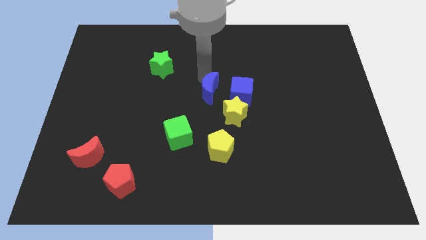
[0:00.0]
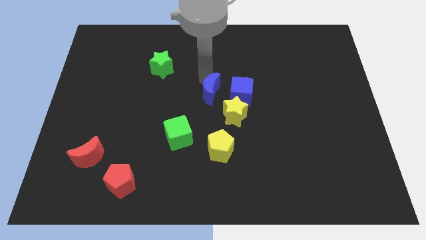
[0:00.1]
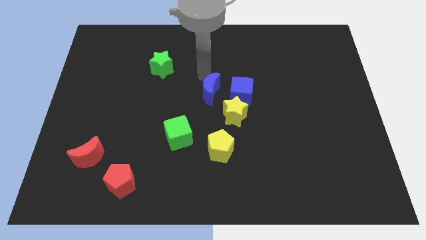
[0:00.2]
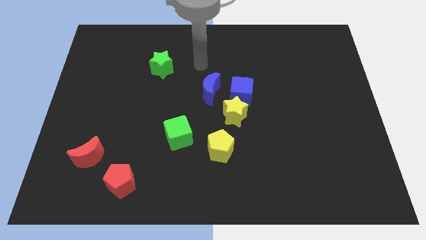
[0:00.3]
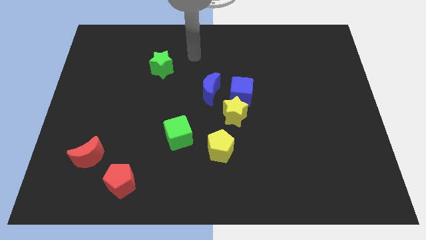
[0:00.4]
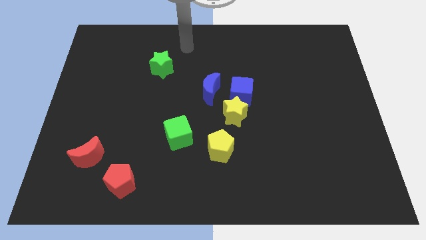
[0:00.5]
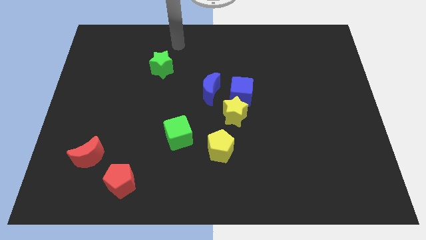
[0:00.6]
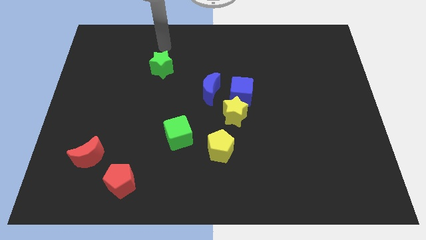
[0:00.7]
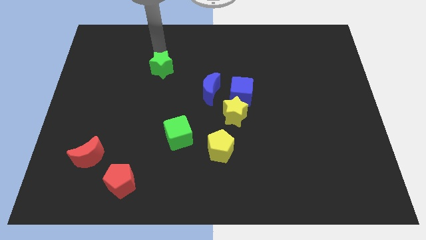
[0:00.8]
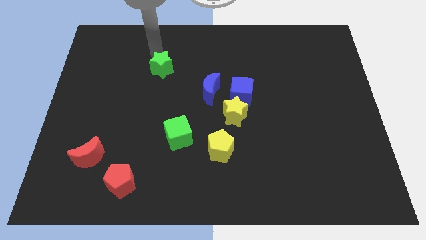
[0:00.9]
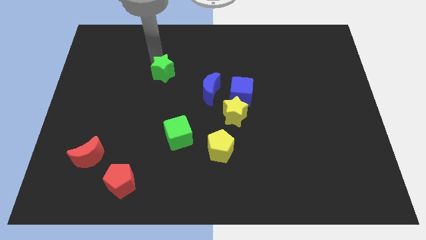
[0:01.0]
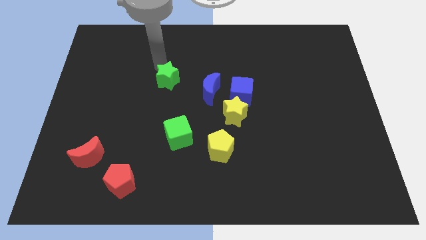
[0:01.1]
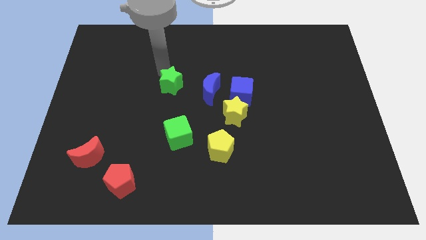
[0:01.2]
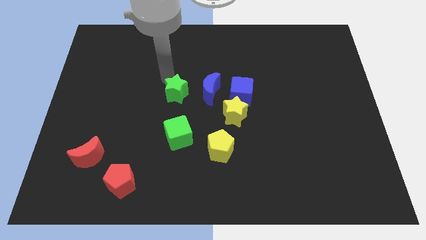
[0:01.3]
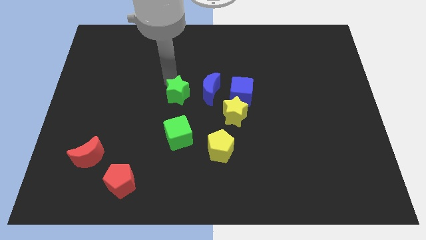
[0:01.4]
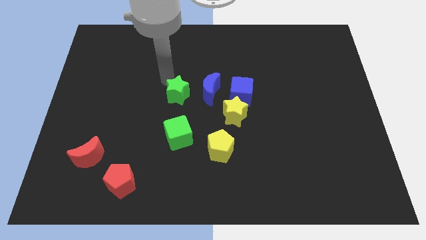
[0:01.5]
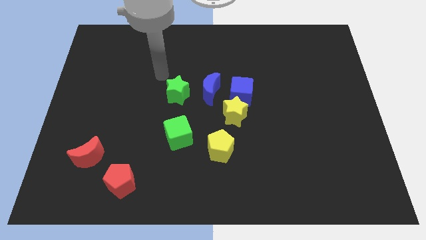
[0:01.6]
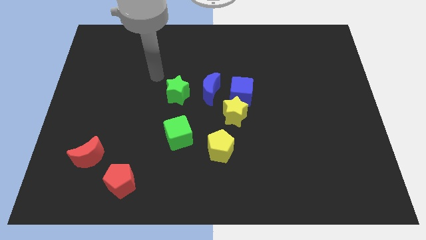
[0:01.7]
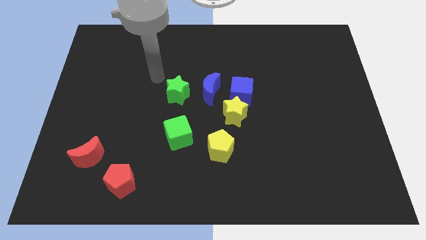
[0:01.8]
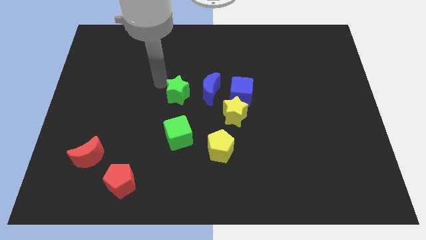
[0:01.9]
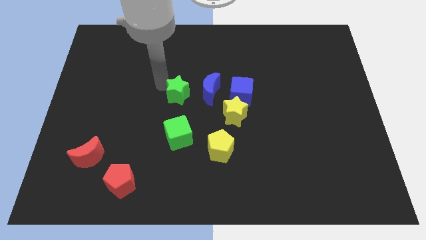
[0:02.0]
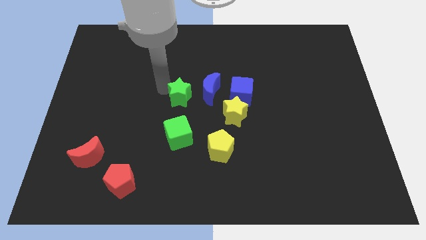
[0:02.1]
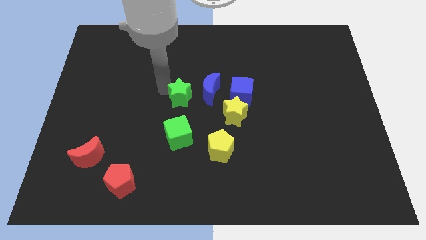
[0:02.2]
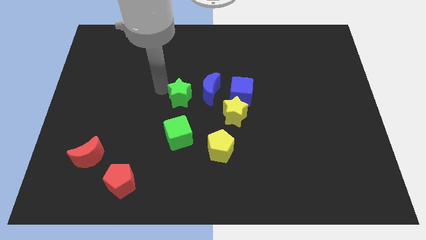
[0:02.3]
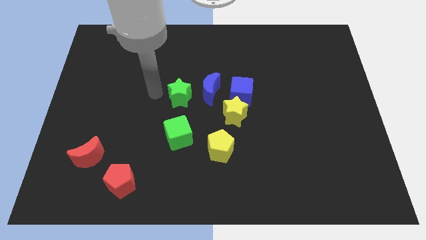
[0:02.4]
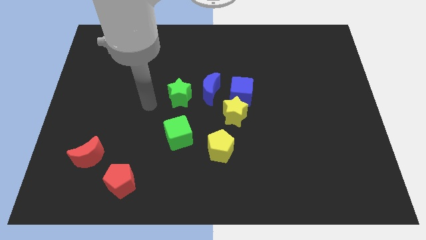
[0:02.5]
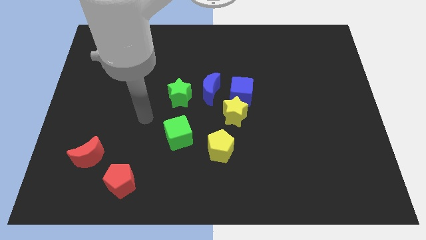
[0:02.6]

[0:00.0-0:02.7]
push the green star to the left of the blue crescent

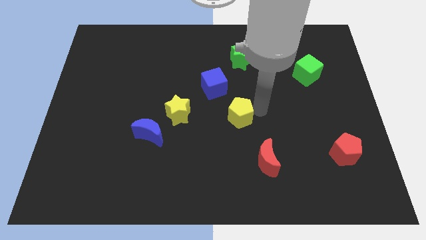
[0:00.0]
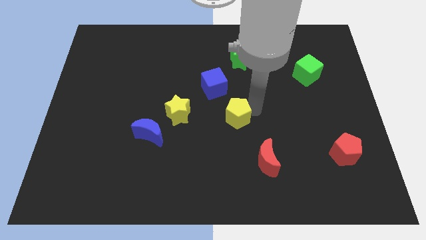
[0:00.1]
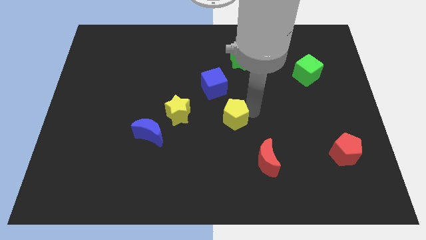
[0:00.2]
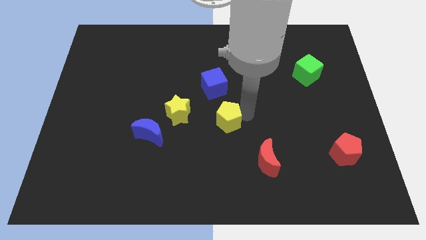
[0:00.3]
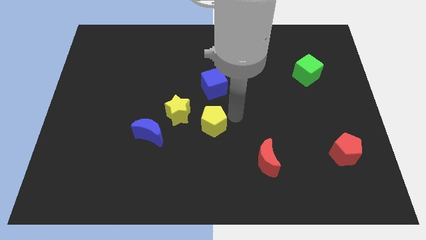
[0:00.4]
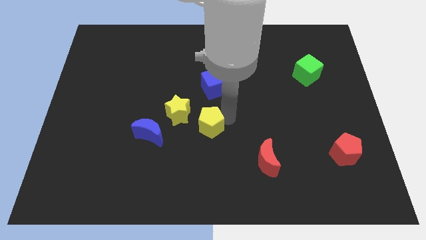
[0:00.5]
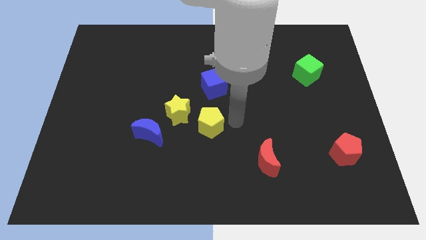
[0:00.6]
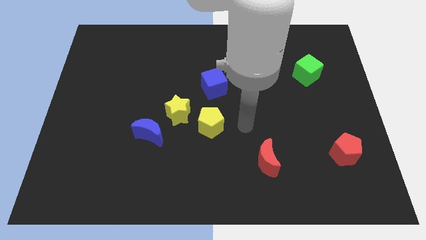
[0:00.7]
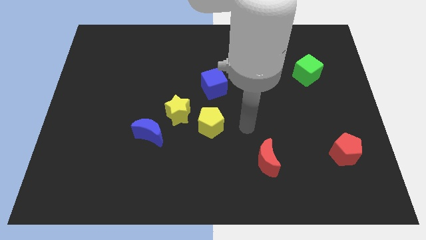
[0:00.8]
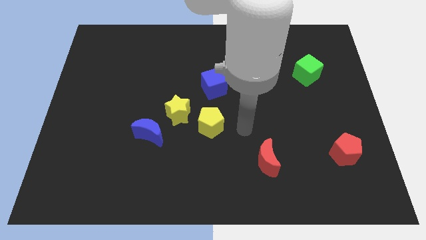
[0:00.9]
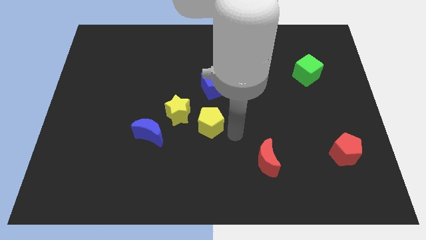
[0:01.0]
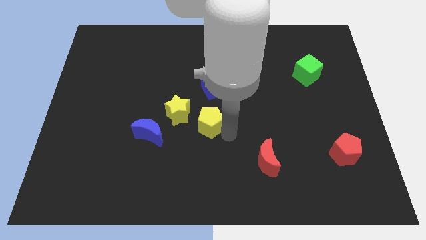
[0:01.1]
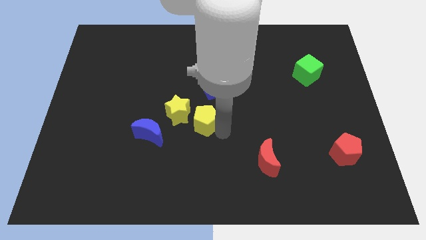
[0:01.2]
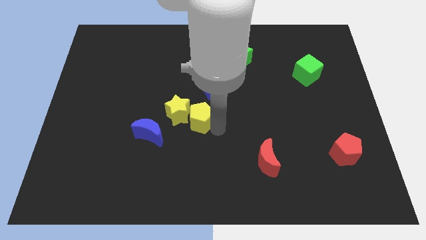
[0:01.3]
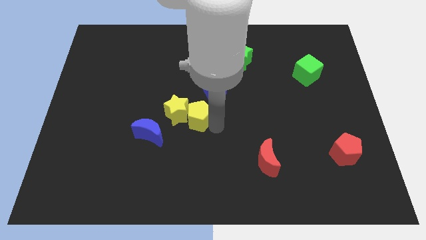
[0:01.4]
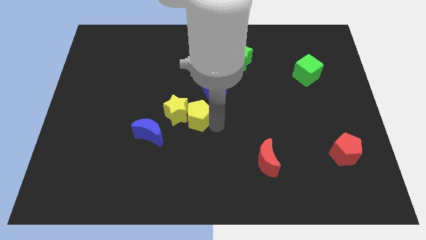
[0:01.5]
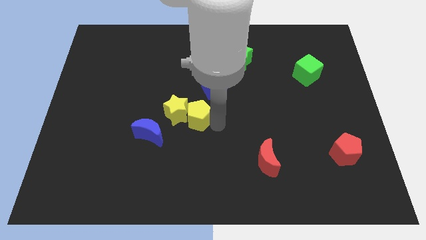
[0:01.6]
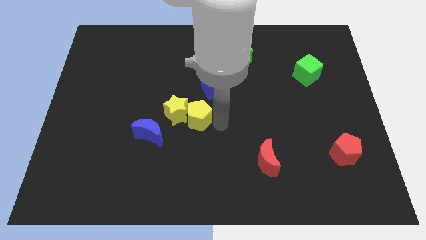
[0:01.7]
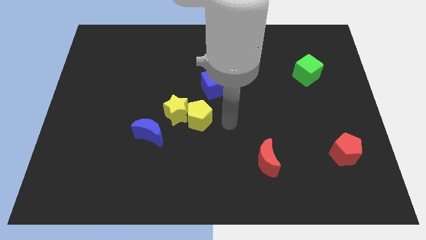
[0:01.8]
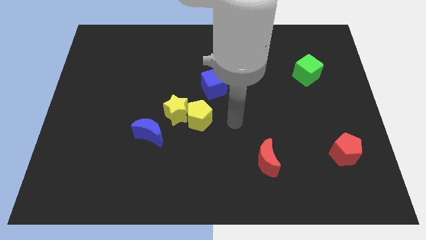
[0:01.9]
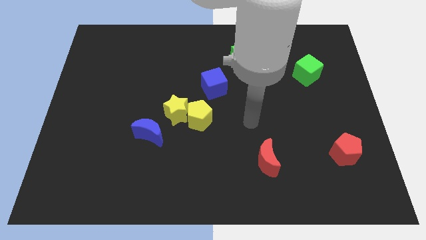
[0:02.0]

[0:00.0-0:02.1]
slide yellow pentagon into yellow star

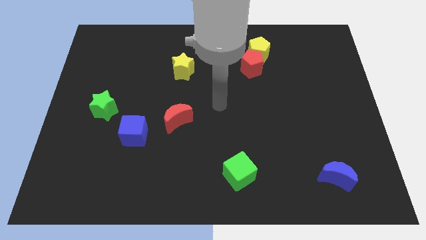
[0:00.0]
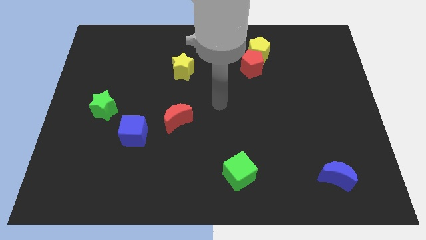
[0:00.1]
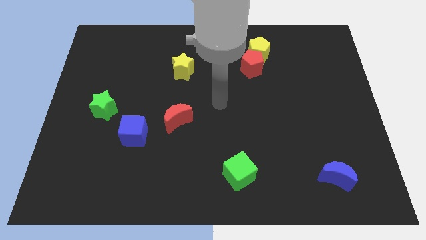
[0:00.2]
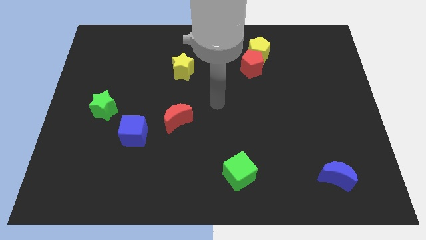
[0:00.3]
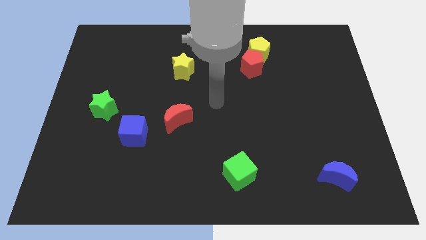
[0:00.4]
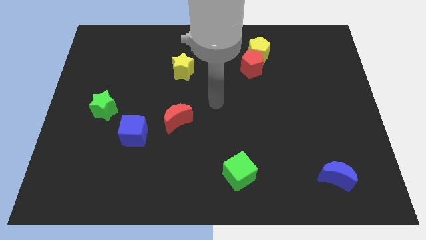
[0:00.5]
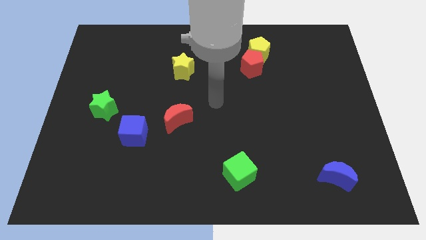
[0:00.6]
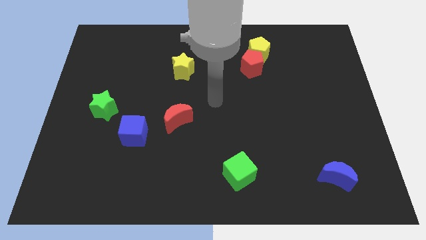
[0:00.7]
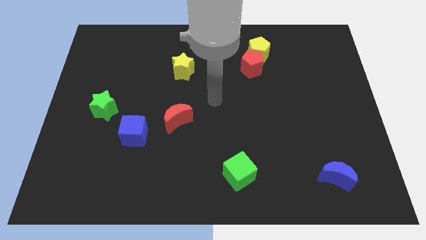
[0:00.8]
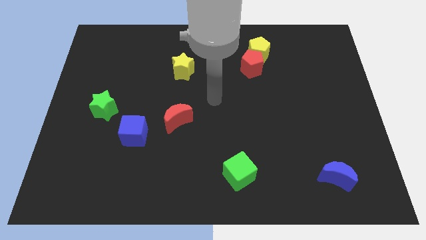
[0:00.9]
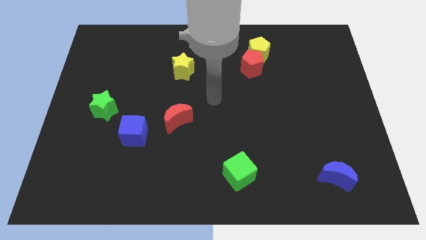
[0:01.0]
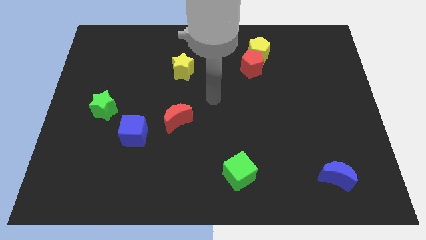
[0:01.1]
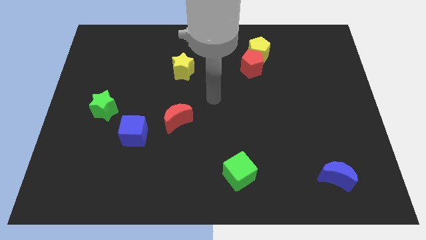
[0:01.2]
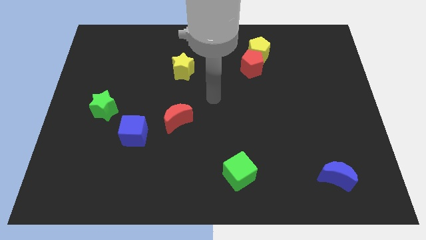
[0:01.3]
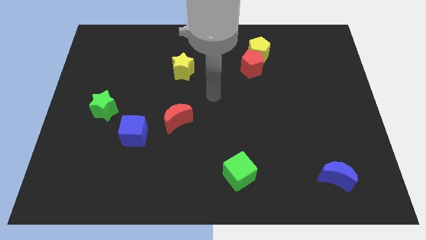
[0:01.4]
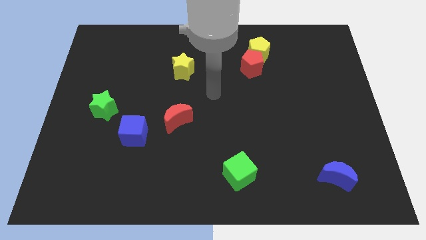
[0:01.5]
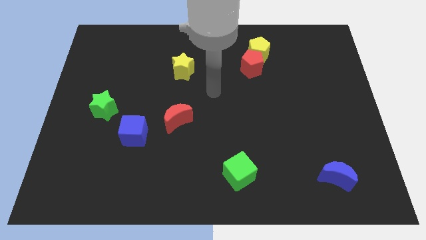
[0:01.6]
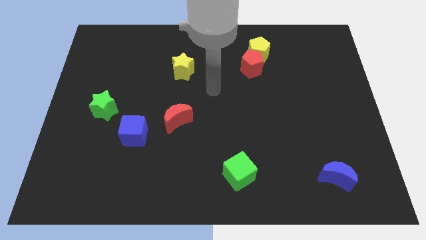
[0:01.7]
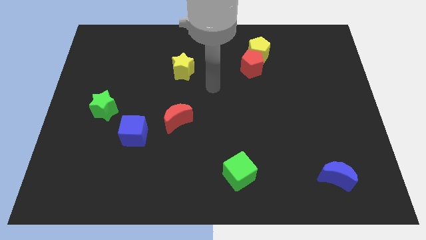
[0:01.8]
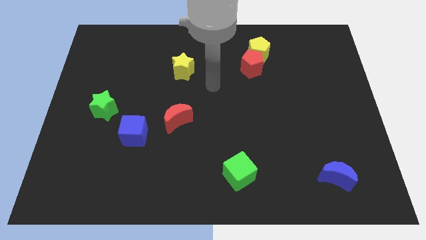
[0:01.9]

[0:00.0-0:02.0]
move the arm in between the red crescent and red pentagon

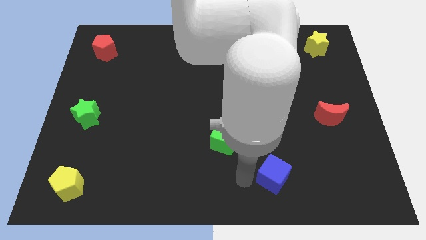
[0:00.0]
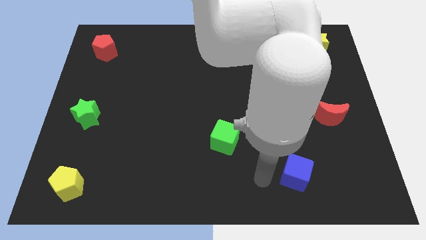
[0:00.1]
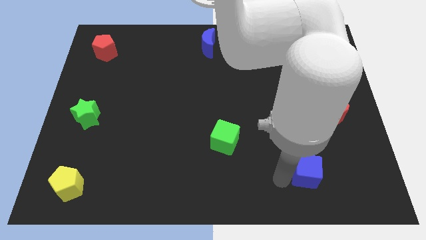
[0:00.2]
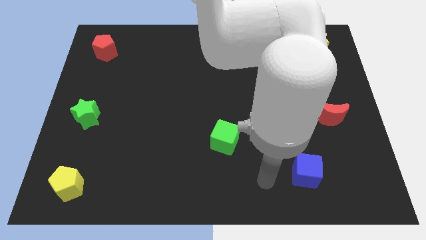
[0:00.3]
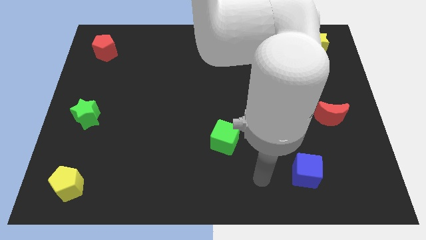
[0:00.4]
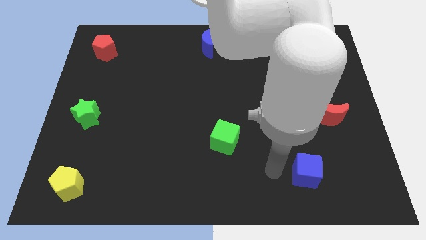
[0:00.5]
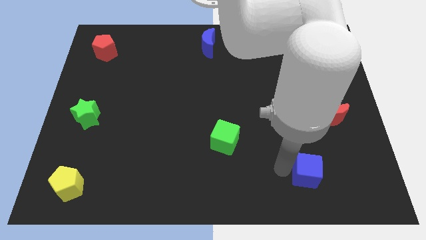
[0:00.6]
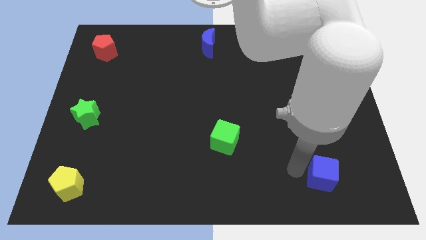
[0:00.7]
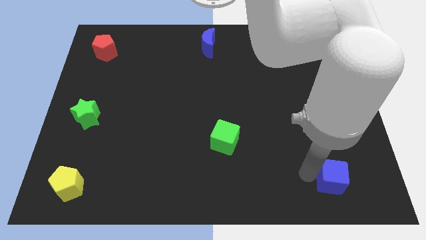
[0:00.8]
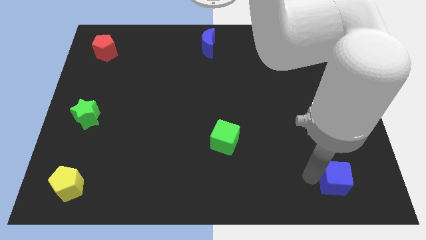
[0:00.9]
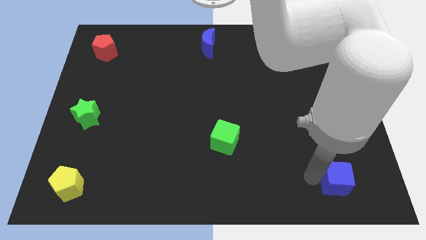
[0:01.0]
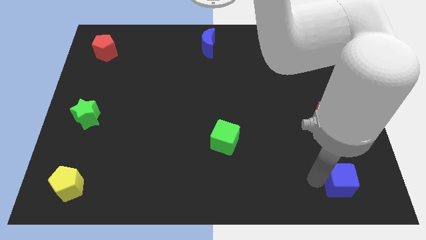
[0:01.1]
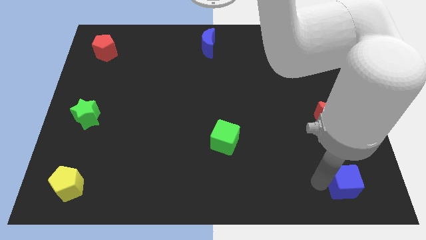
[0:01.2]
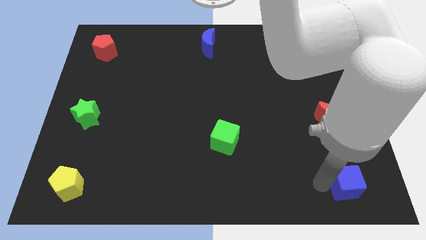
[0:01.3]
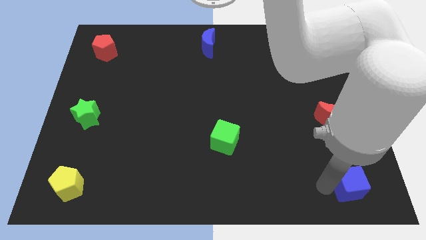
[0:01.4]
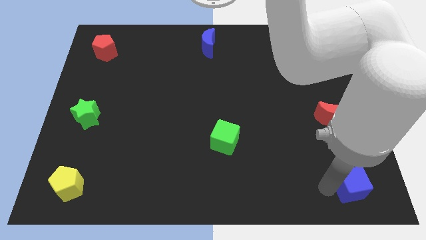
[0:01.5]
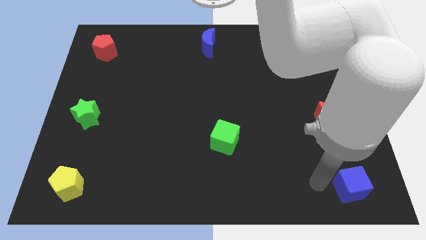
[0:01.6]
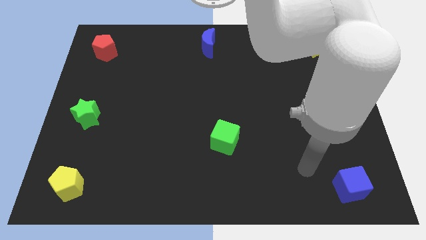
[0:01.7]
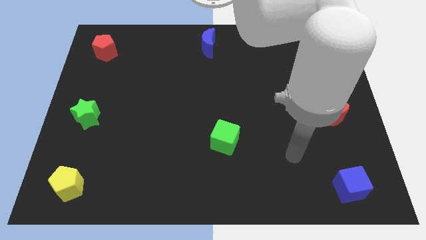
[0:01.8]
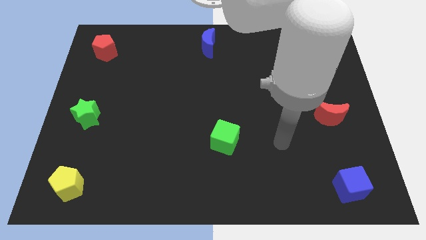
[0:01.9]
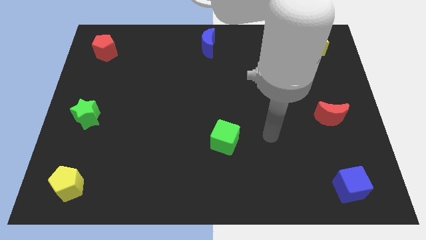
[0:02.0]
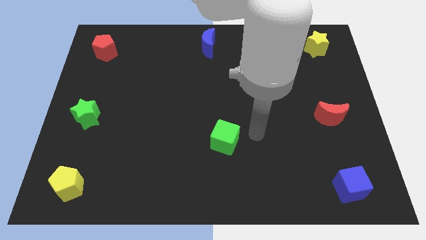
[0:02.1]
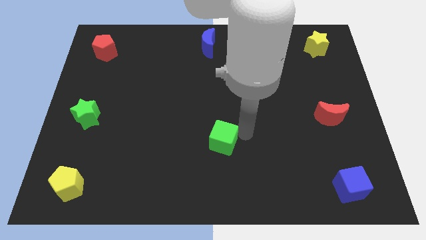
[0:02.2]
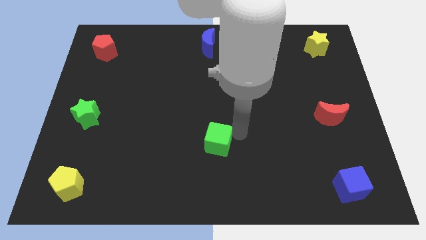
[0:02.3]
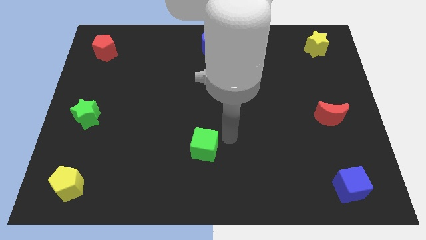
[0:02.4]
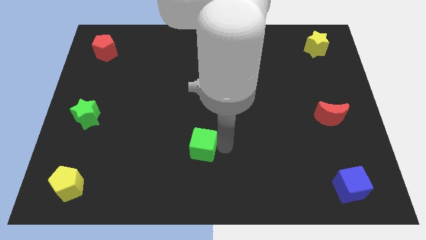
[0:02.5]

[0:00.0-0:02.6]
move the blue cube to the bottom right
